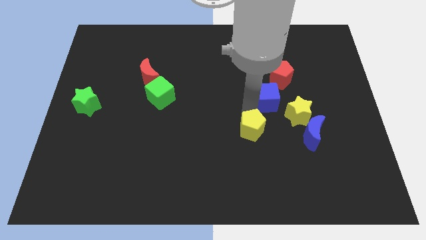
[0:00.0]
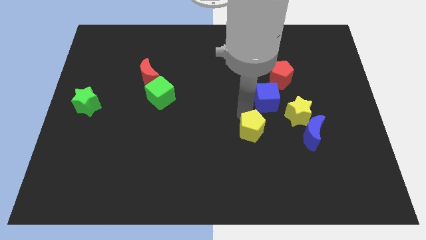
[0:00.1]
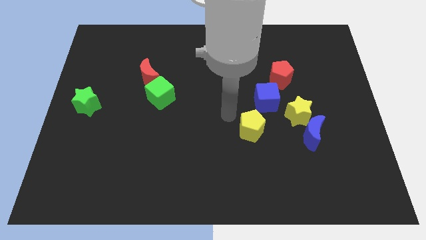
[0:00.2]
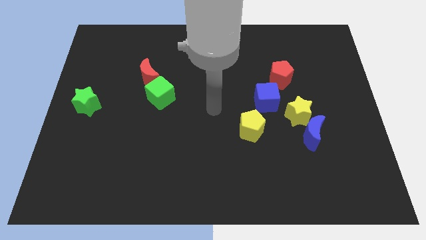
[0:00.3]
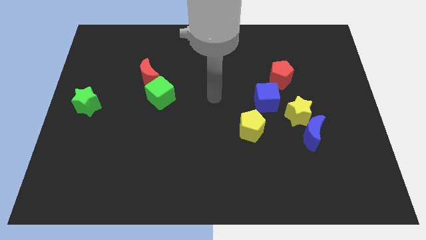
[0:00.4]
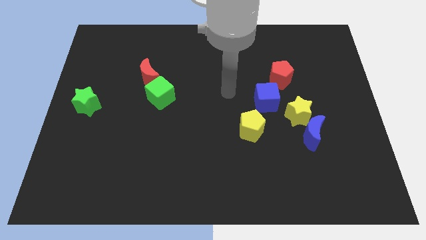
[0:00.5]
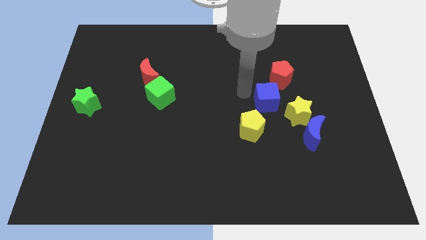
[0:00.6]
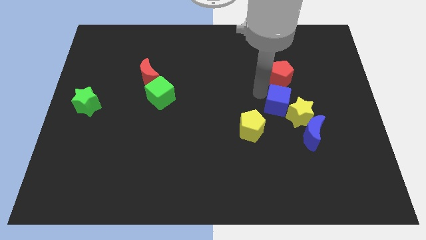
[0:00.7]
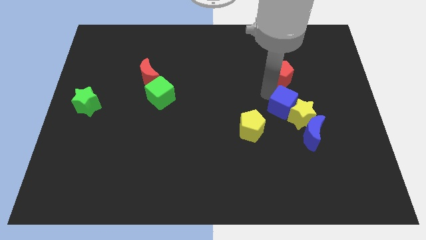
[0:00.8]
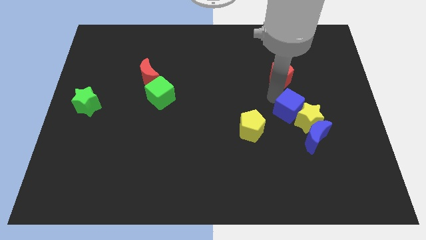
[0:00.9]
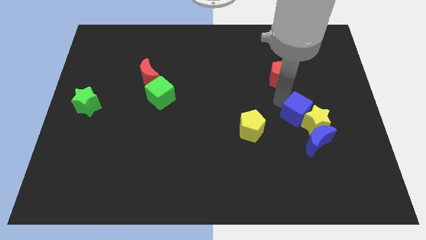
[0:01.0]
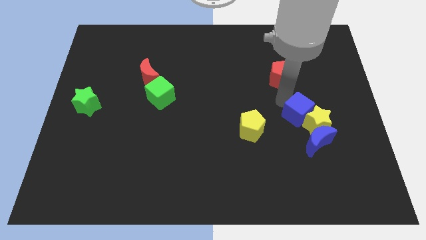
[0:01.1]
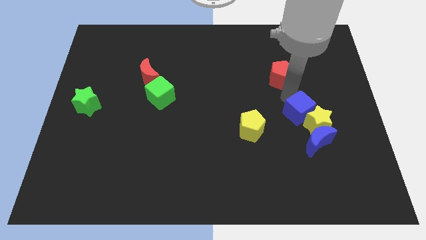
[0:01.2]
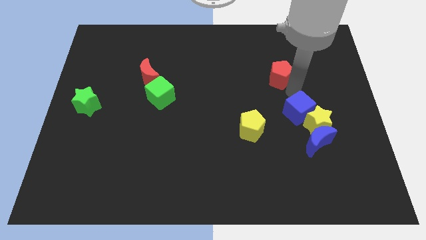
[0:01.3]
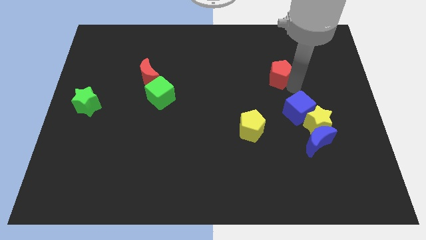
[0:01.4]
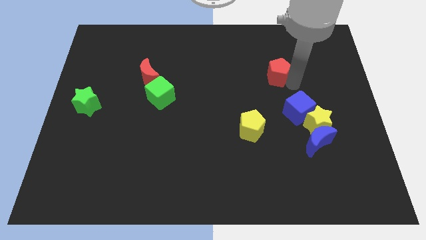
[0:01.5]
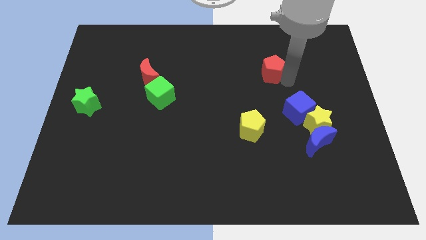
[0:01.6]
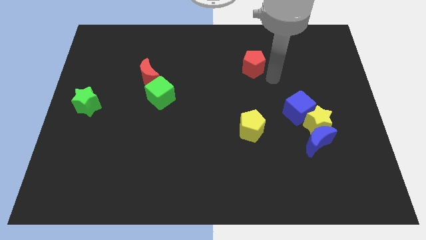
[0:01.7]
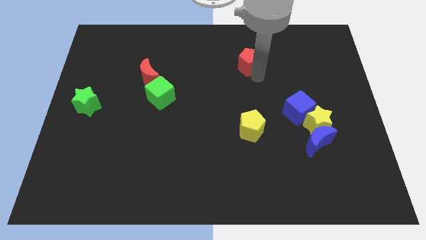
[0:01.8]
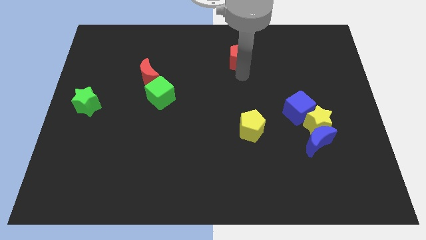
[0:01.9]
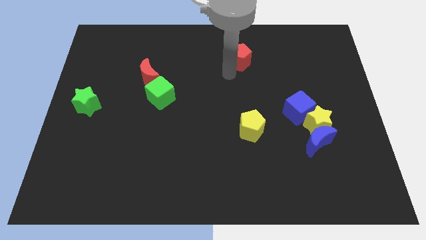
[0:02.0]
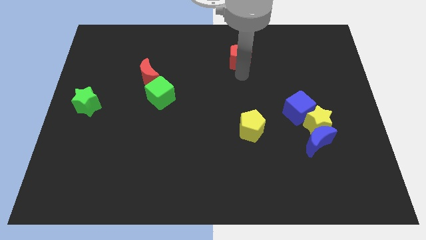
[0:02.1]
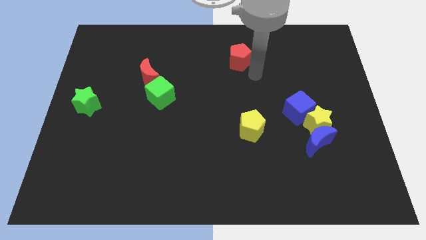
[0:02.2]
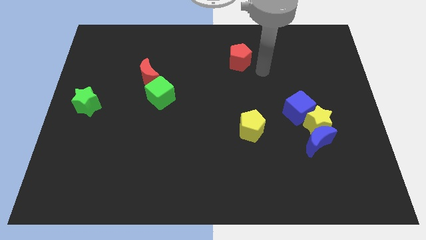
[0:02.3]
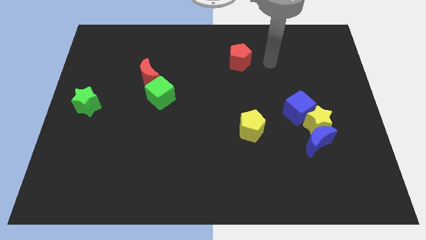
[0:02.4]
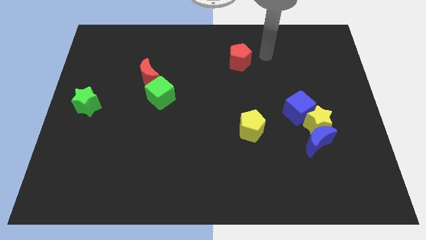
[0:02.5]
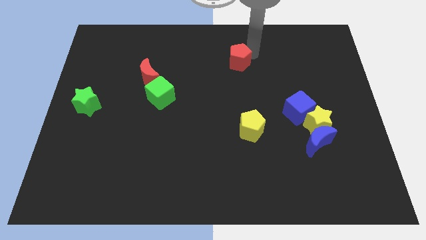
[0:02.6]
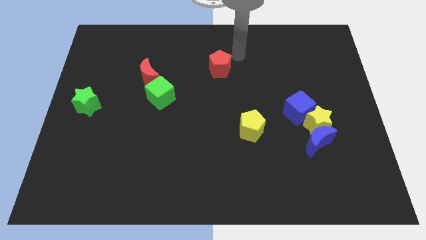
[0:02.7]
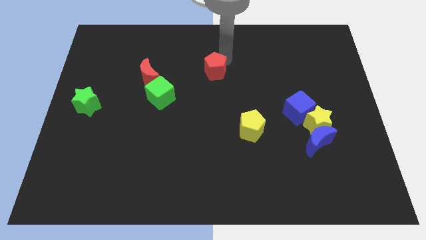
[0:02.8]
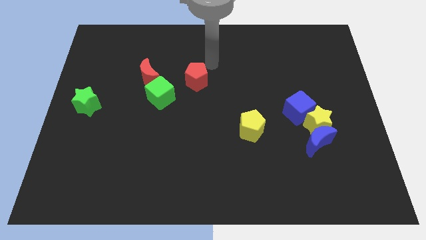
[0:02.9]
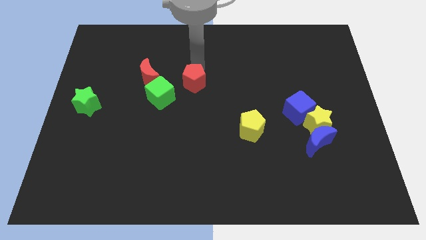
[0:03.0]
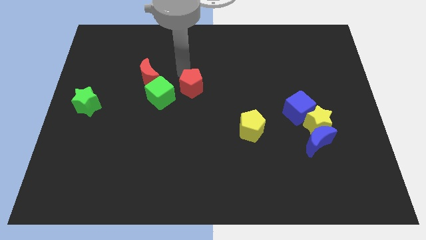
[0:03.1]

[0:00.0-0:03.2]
move the blue cube close to the yellow star

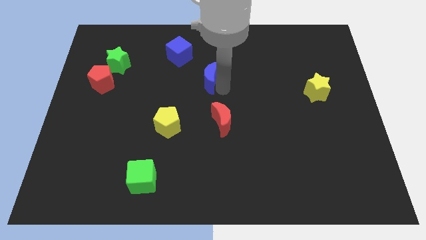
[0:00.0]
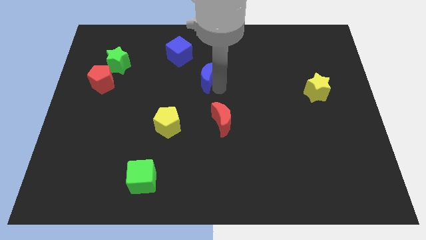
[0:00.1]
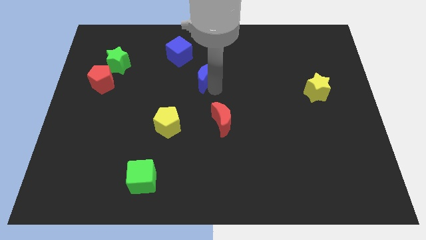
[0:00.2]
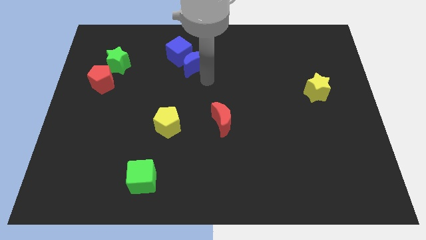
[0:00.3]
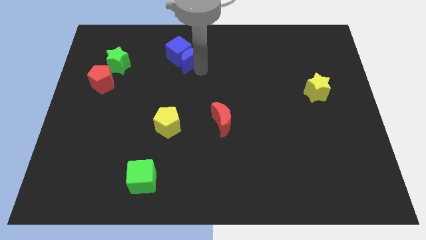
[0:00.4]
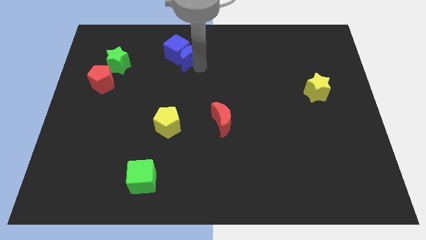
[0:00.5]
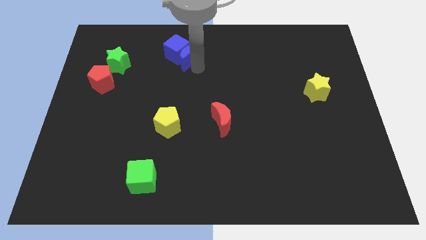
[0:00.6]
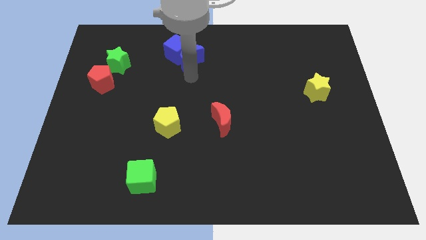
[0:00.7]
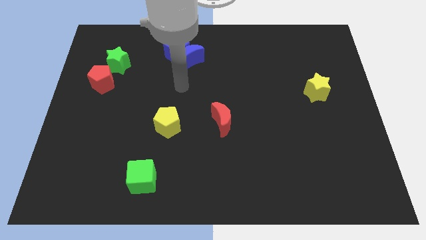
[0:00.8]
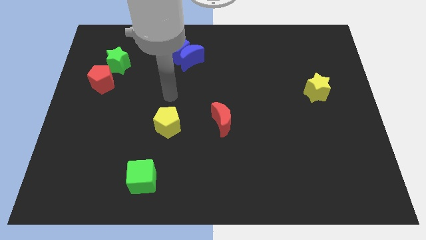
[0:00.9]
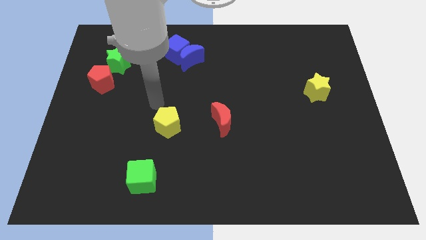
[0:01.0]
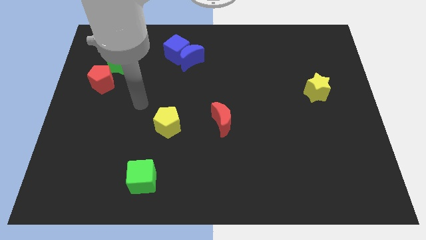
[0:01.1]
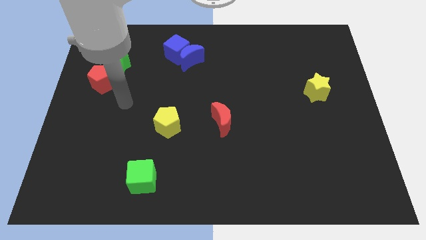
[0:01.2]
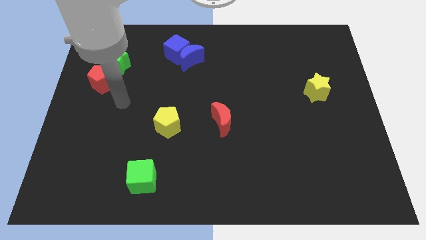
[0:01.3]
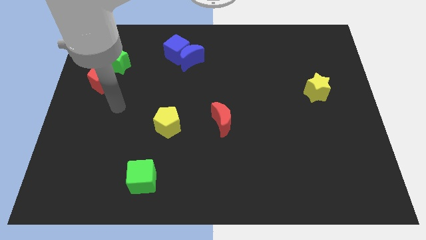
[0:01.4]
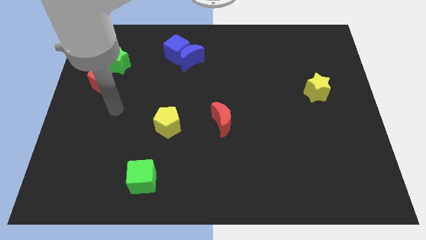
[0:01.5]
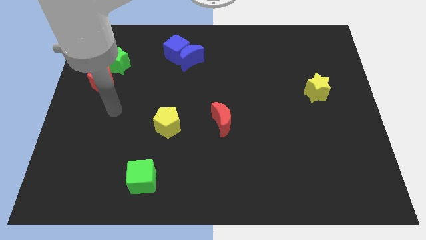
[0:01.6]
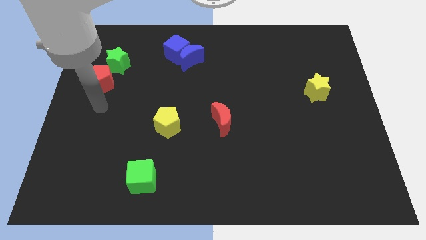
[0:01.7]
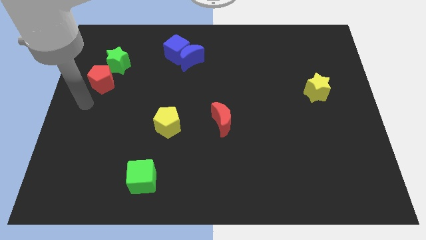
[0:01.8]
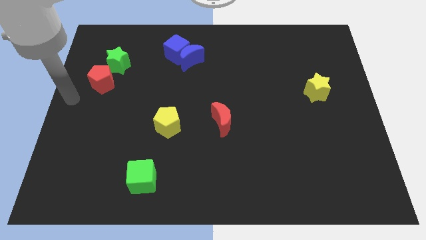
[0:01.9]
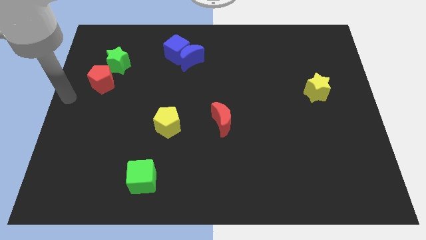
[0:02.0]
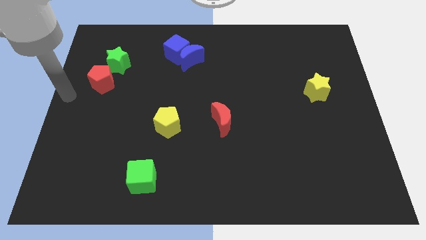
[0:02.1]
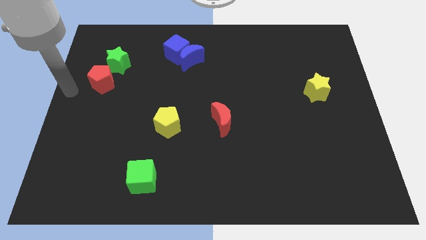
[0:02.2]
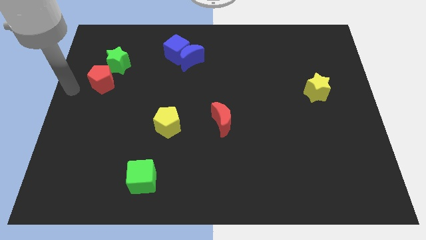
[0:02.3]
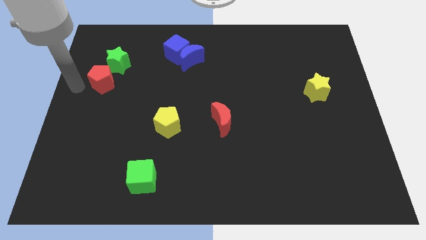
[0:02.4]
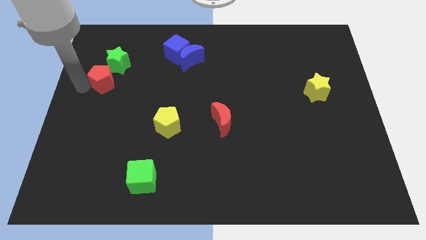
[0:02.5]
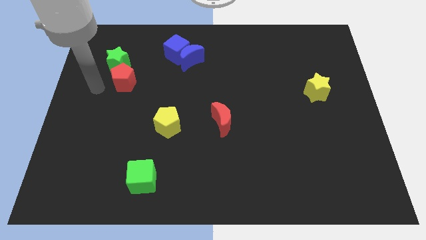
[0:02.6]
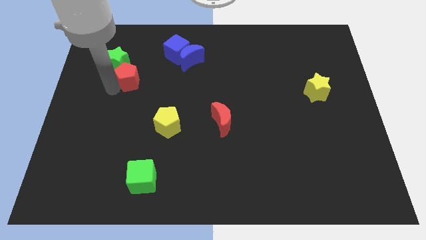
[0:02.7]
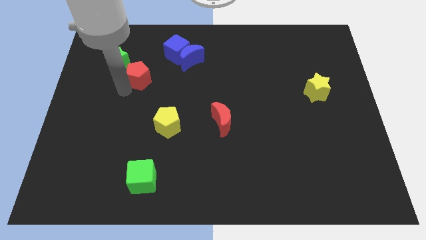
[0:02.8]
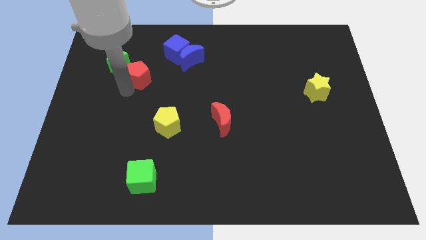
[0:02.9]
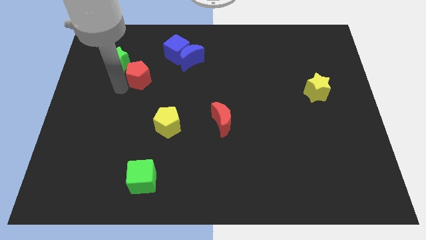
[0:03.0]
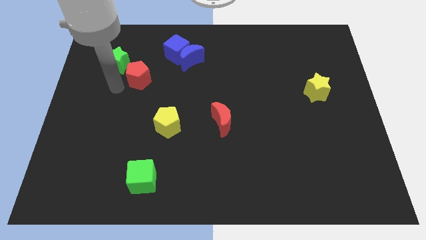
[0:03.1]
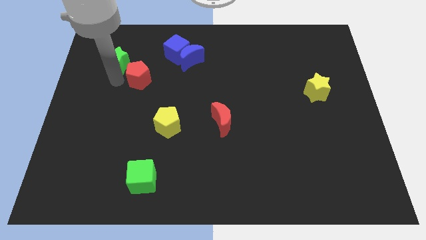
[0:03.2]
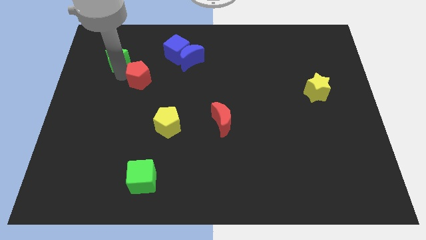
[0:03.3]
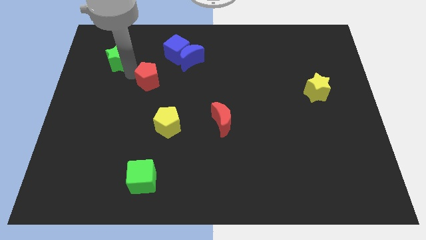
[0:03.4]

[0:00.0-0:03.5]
slide both the blue blocks diagonal to the red pentagon

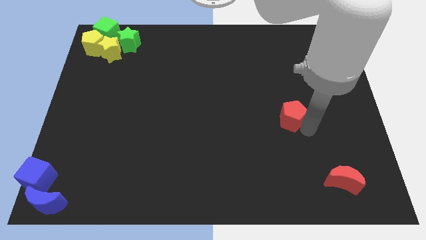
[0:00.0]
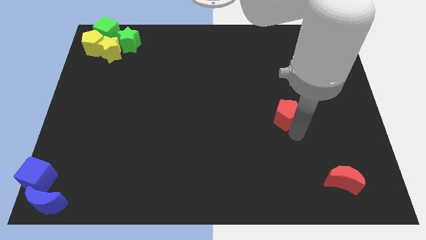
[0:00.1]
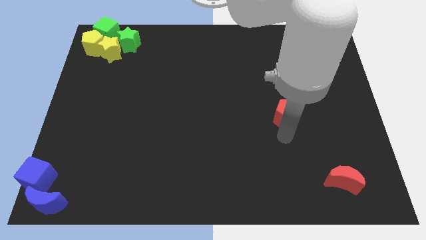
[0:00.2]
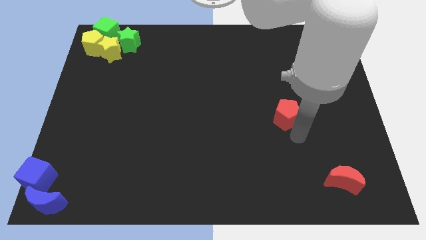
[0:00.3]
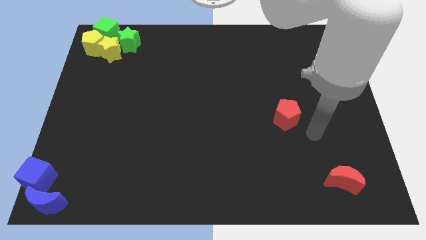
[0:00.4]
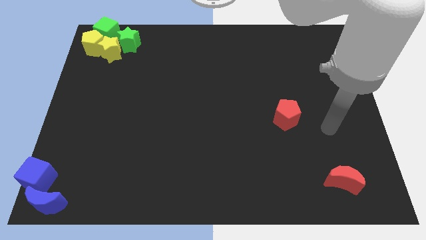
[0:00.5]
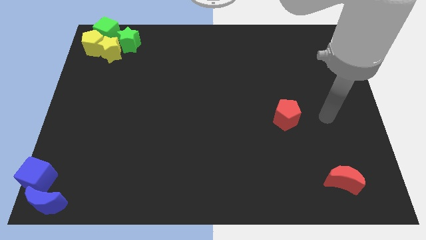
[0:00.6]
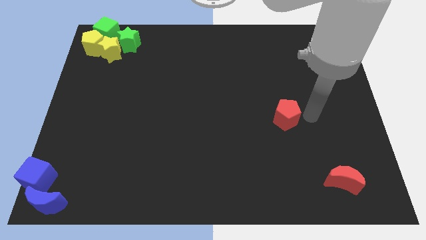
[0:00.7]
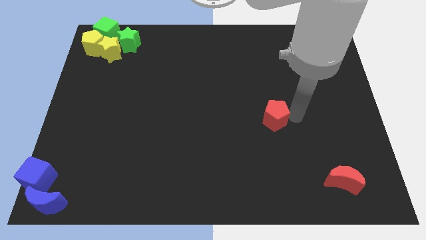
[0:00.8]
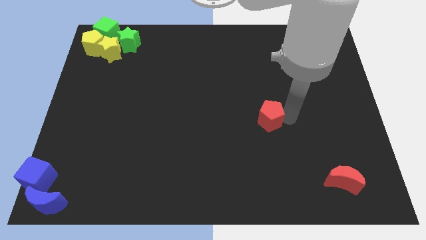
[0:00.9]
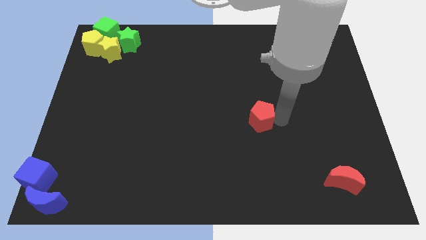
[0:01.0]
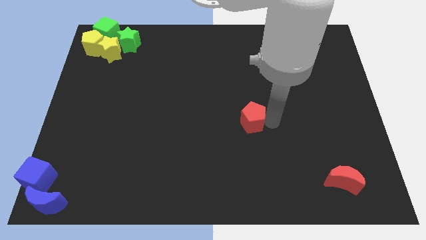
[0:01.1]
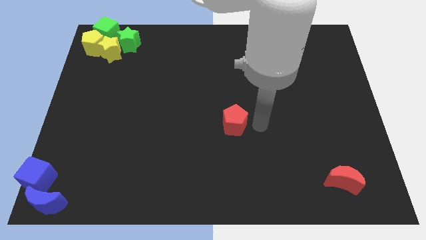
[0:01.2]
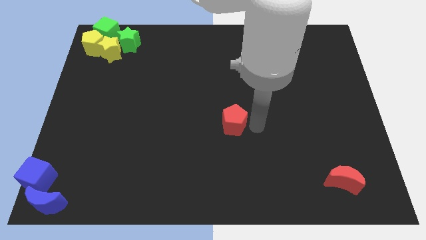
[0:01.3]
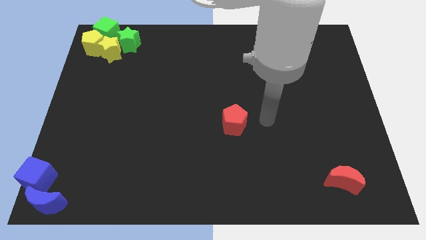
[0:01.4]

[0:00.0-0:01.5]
move the red pentagon middle of the board

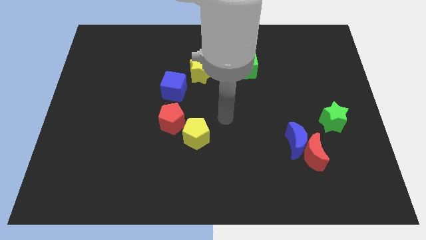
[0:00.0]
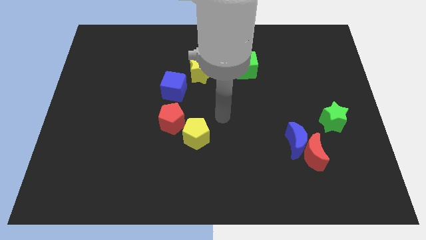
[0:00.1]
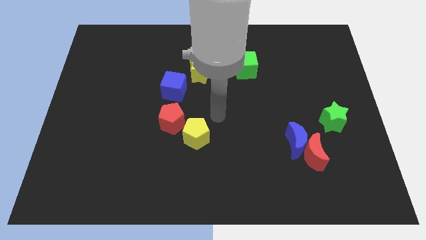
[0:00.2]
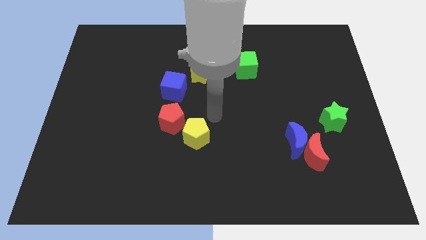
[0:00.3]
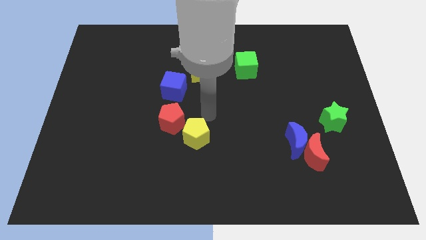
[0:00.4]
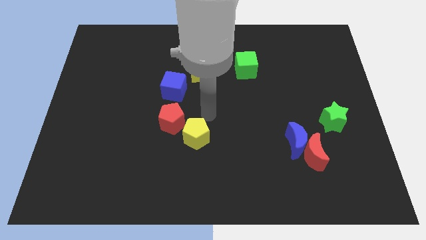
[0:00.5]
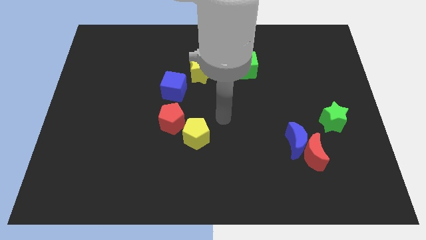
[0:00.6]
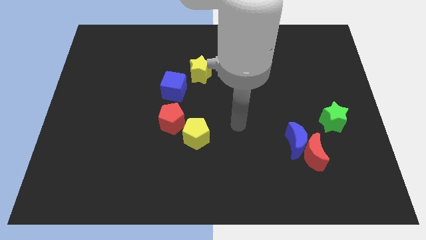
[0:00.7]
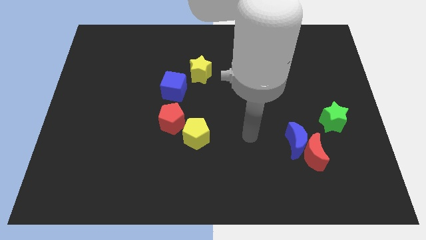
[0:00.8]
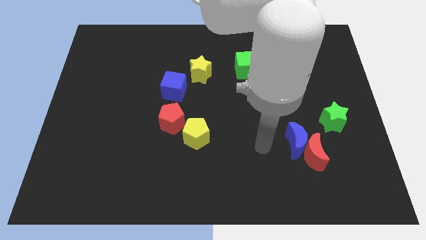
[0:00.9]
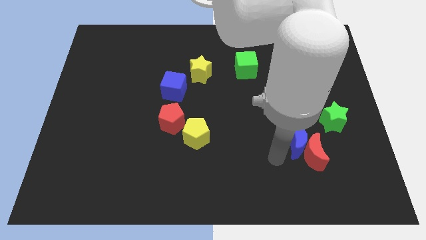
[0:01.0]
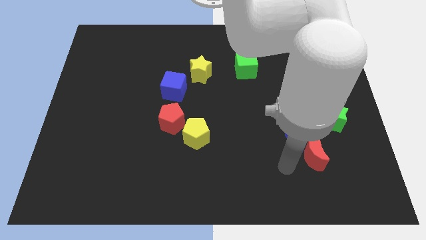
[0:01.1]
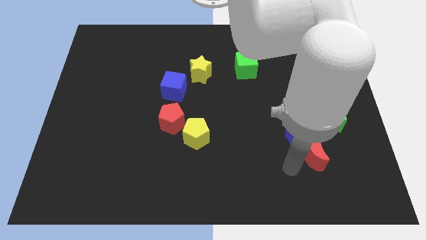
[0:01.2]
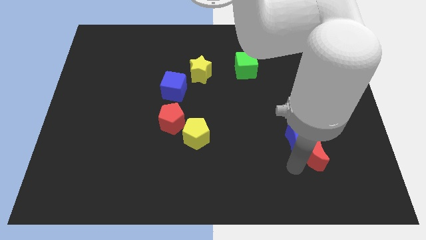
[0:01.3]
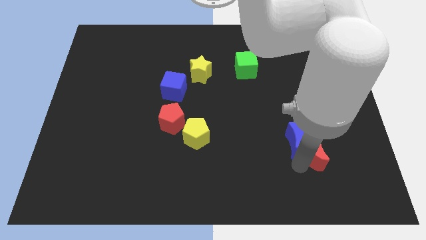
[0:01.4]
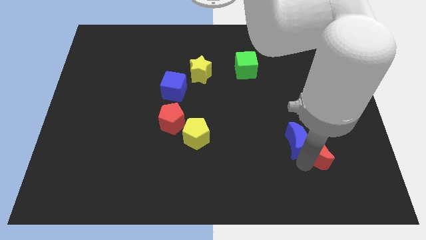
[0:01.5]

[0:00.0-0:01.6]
tap the red crescent
